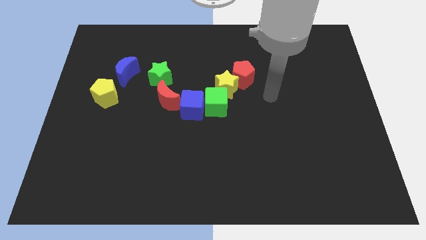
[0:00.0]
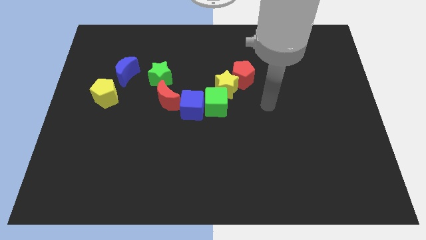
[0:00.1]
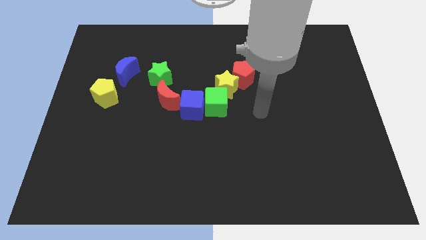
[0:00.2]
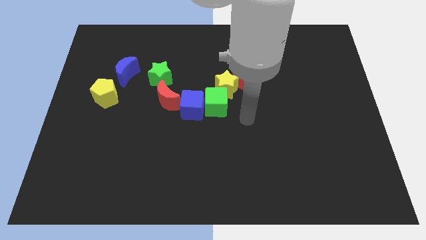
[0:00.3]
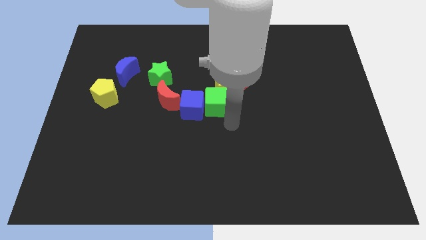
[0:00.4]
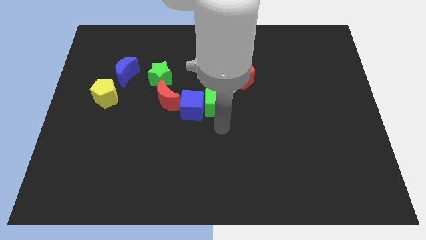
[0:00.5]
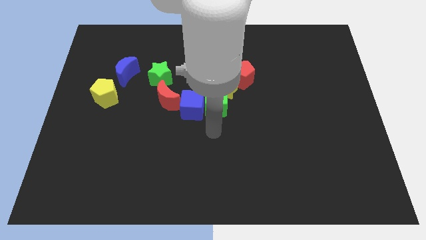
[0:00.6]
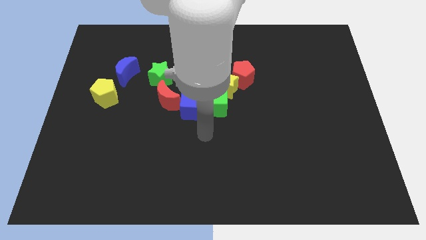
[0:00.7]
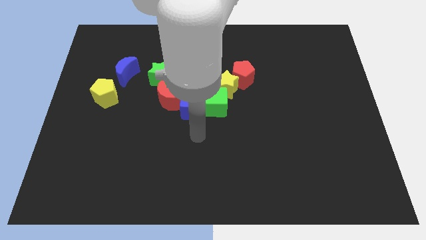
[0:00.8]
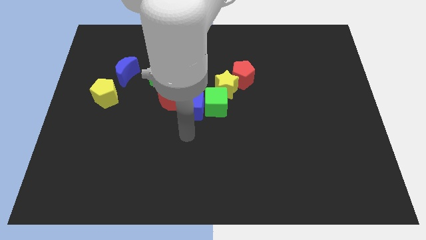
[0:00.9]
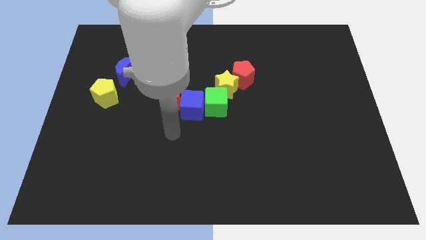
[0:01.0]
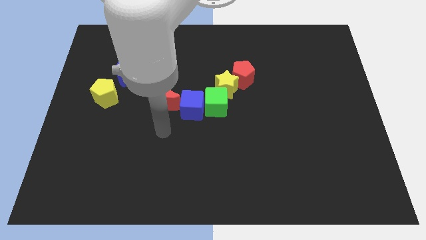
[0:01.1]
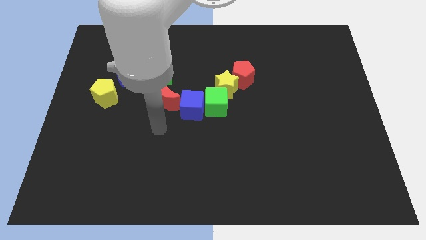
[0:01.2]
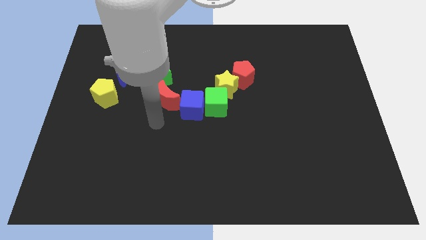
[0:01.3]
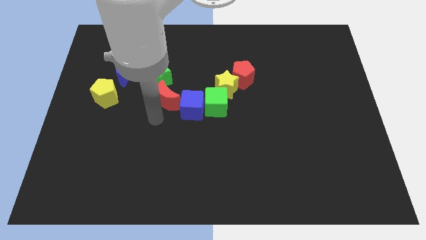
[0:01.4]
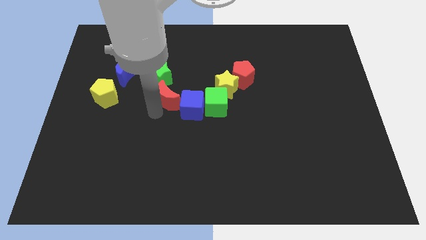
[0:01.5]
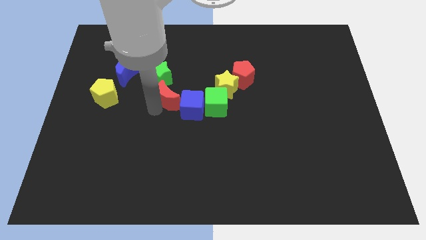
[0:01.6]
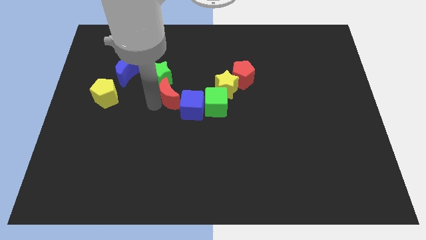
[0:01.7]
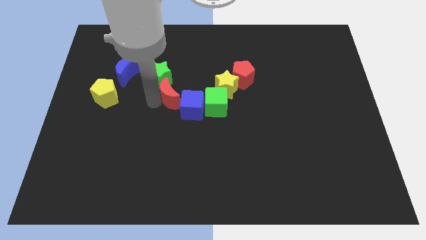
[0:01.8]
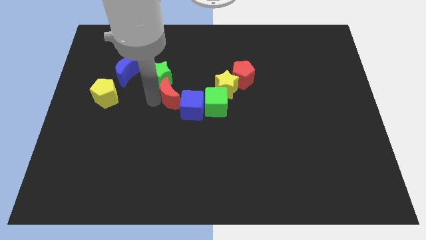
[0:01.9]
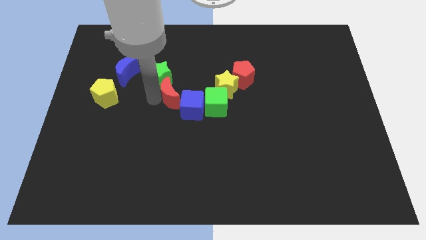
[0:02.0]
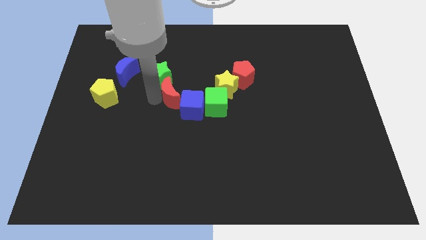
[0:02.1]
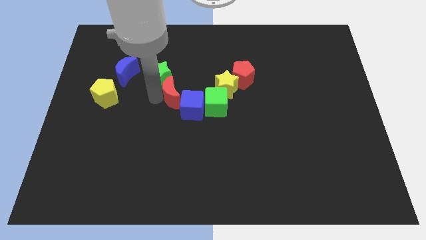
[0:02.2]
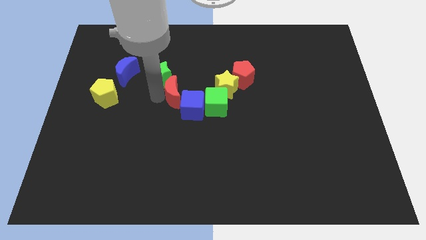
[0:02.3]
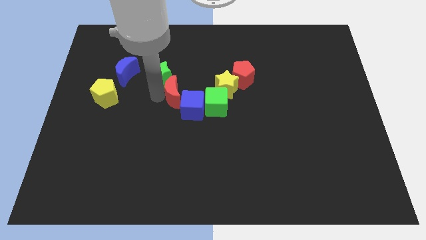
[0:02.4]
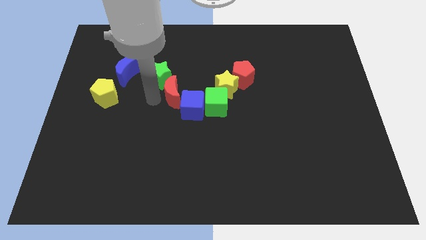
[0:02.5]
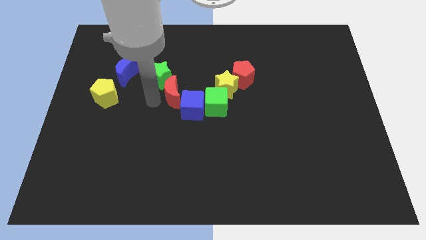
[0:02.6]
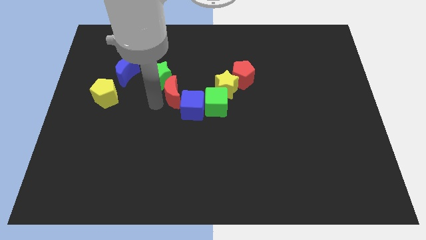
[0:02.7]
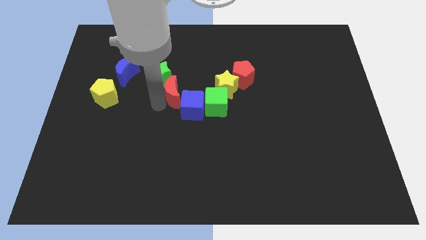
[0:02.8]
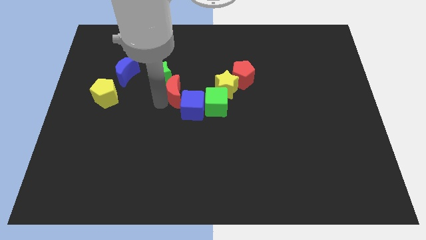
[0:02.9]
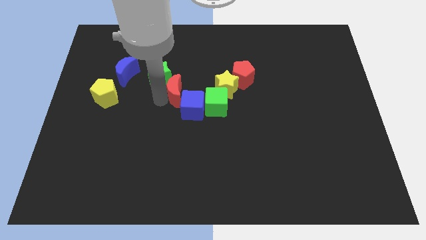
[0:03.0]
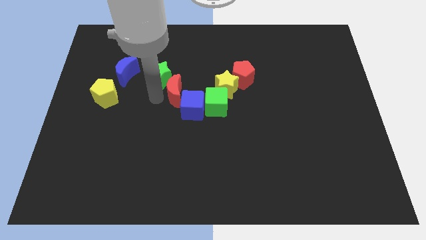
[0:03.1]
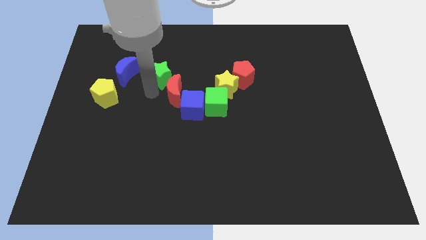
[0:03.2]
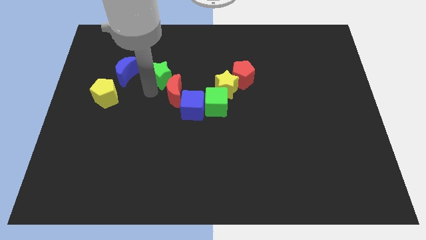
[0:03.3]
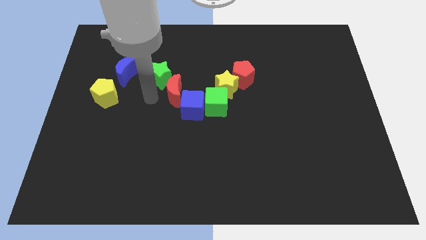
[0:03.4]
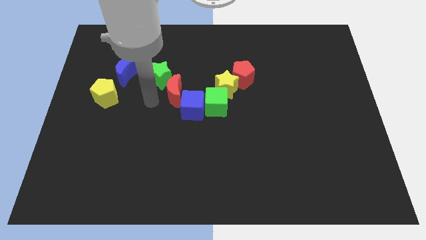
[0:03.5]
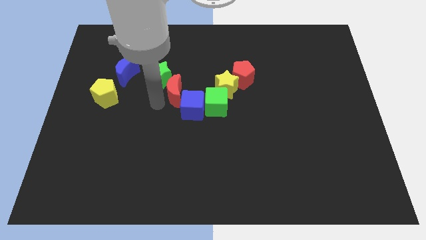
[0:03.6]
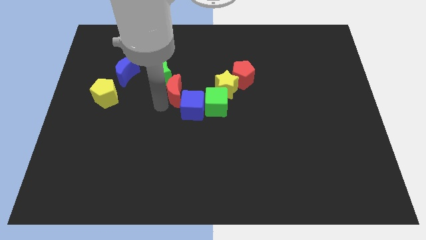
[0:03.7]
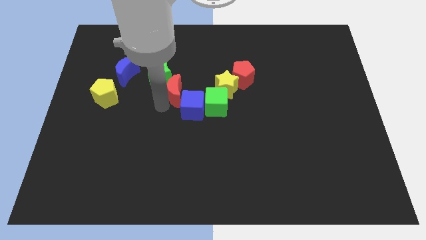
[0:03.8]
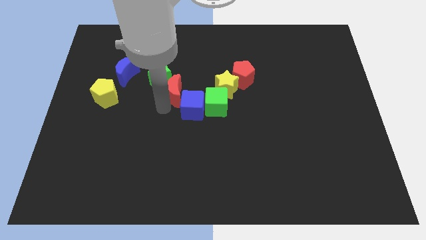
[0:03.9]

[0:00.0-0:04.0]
slightly push the red crescent towards the right

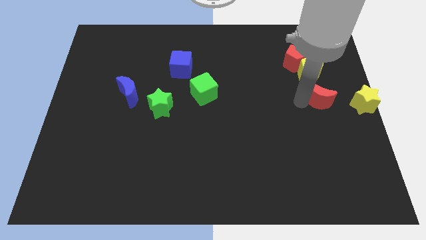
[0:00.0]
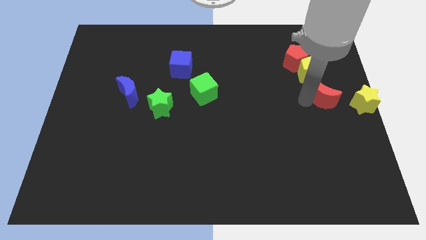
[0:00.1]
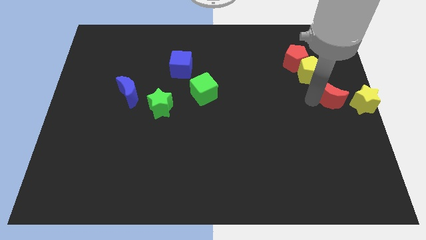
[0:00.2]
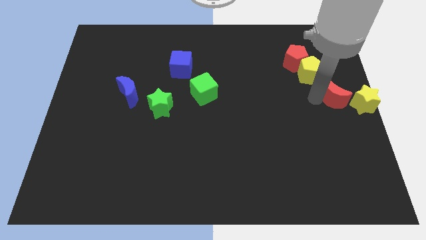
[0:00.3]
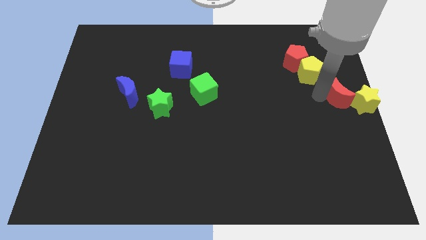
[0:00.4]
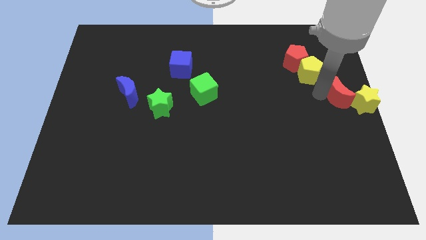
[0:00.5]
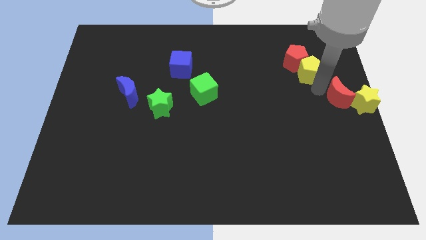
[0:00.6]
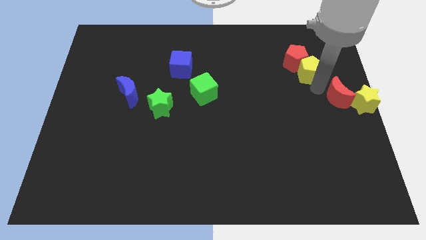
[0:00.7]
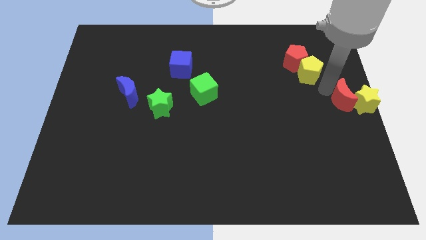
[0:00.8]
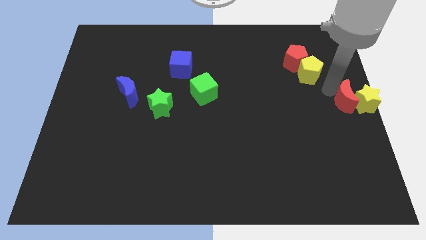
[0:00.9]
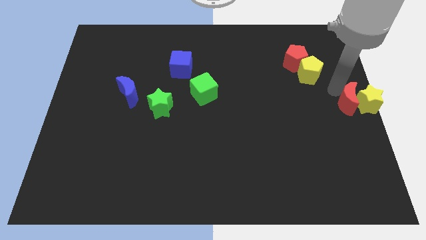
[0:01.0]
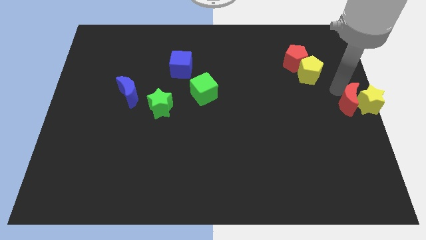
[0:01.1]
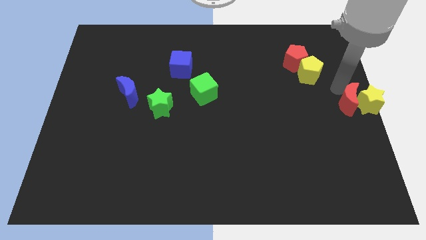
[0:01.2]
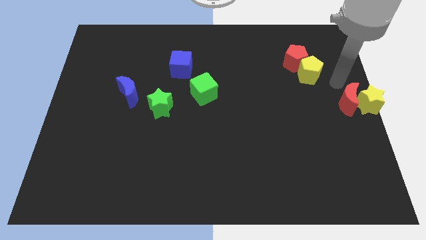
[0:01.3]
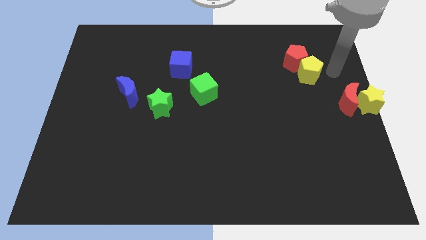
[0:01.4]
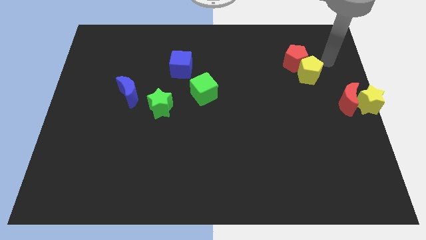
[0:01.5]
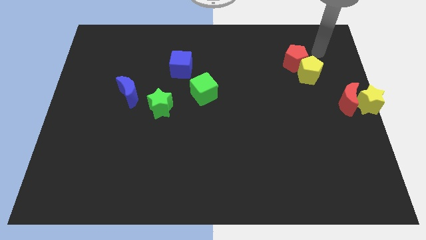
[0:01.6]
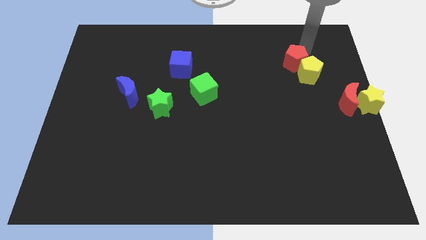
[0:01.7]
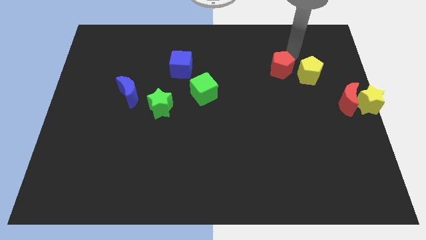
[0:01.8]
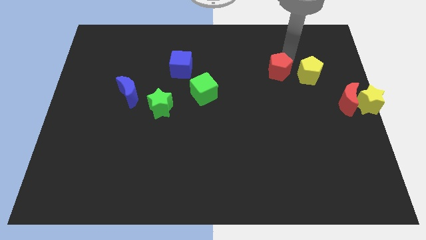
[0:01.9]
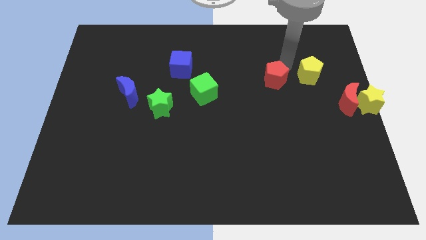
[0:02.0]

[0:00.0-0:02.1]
move the red crescent to the left side of the yellow star

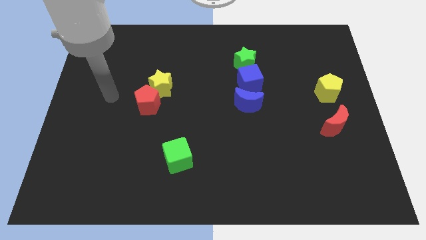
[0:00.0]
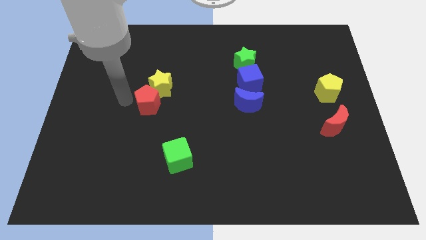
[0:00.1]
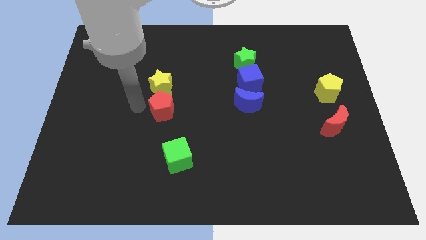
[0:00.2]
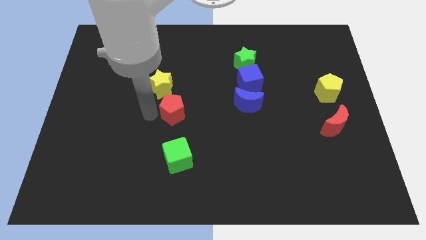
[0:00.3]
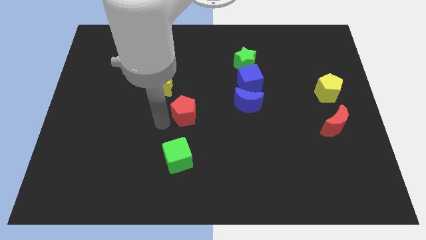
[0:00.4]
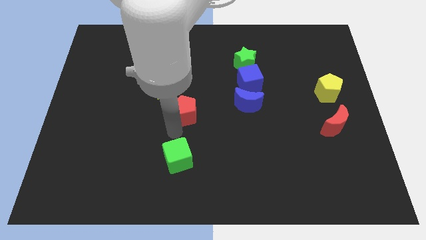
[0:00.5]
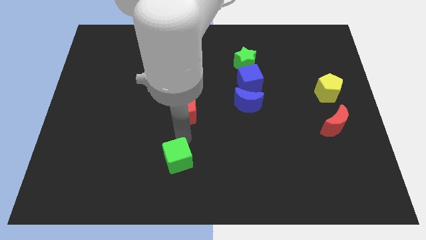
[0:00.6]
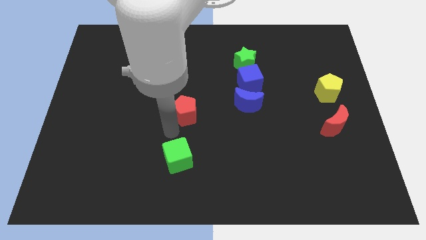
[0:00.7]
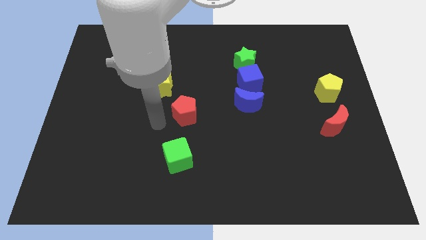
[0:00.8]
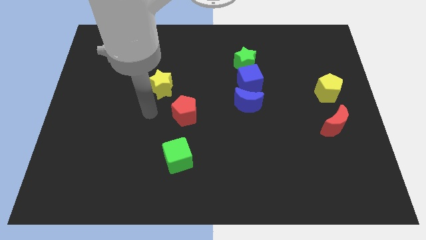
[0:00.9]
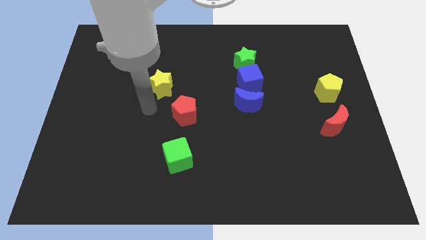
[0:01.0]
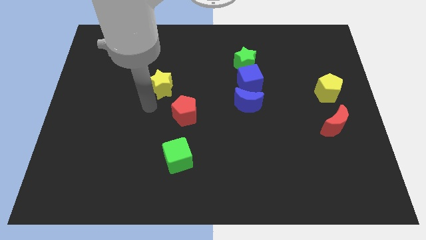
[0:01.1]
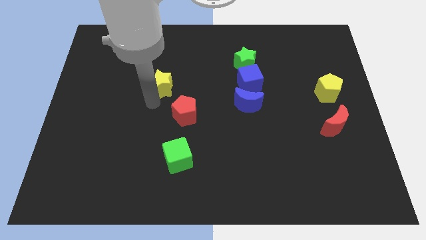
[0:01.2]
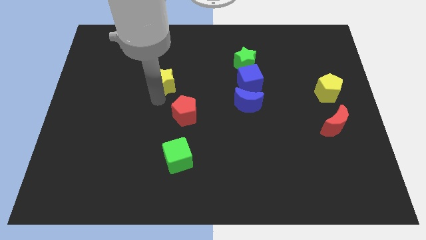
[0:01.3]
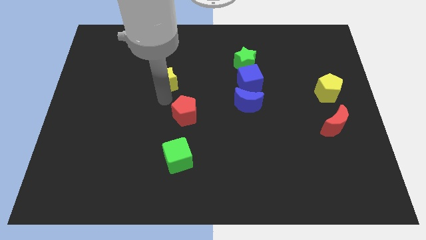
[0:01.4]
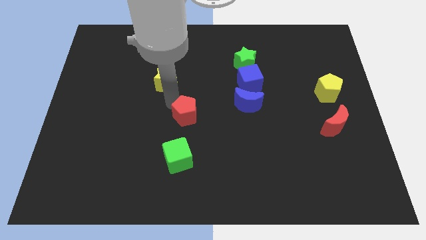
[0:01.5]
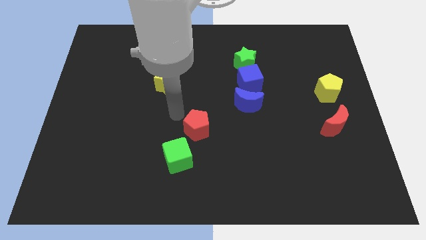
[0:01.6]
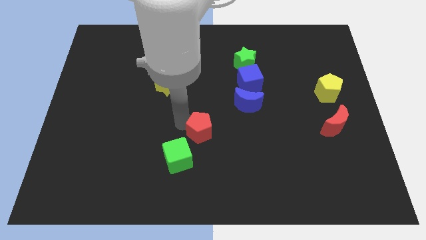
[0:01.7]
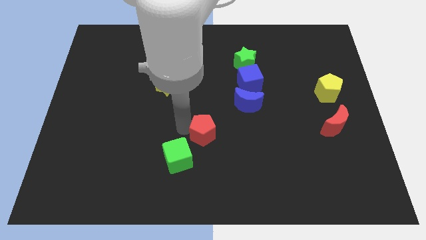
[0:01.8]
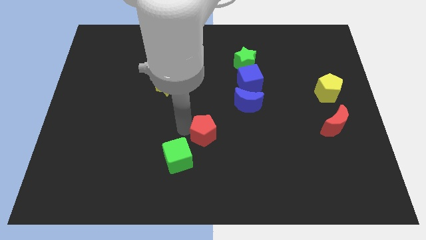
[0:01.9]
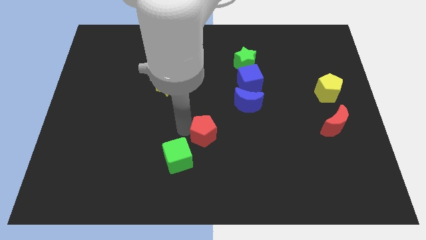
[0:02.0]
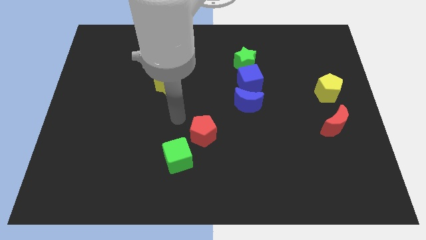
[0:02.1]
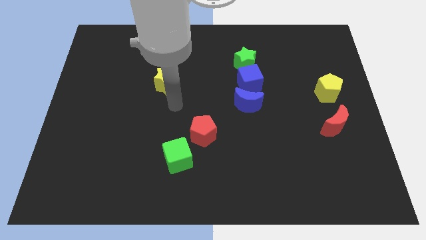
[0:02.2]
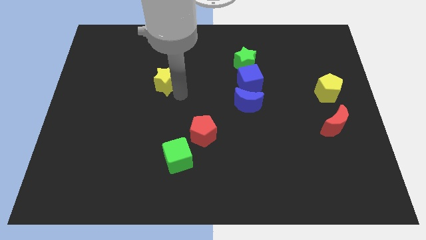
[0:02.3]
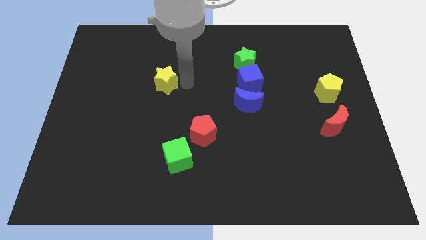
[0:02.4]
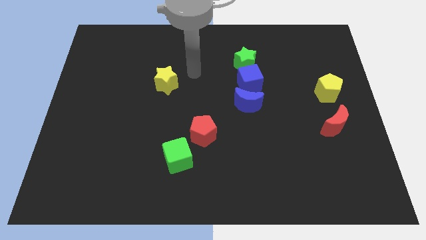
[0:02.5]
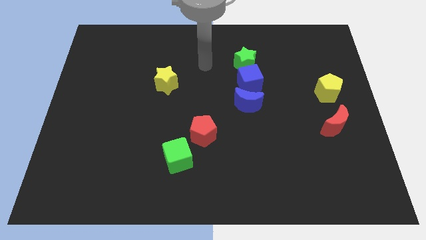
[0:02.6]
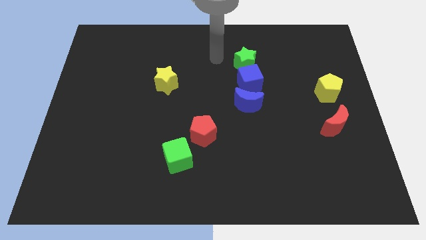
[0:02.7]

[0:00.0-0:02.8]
place the red pentagon near green cube

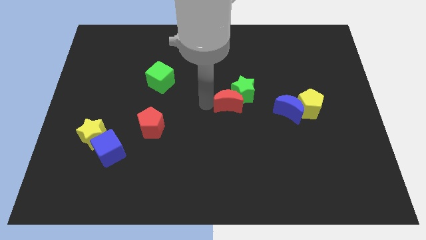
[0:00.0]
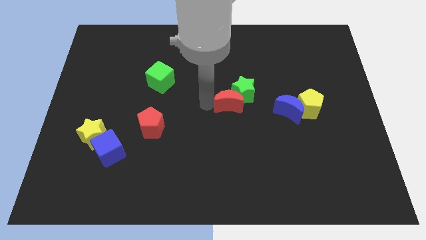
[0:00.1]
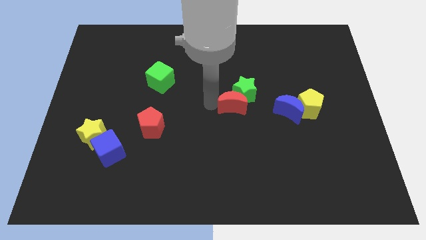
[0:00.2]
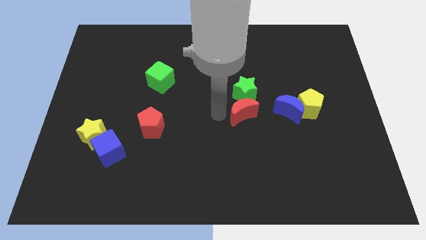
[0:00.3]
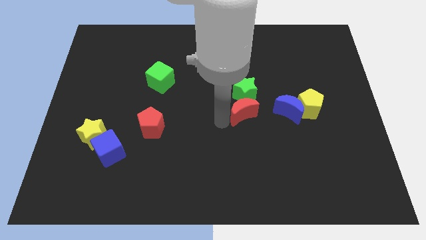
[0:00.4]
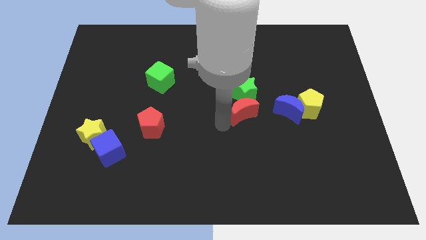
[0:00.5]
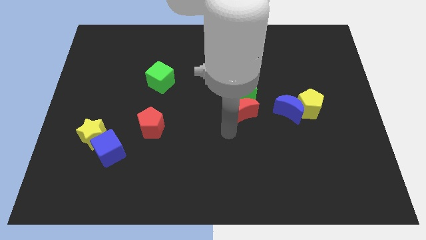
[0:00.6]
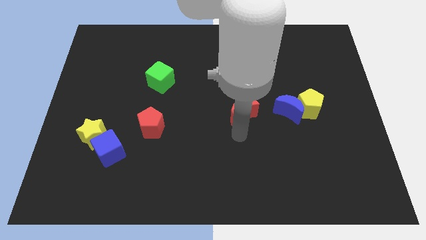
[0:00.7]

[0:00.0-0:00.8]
place red crescent at the bottom of green star
